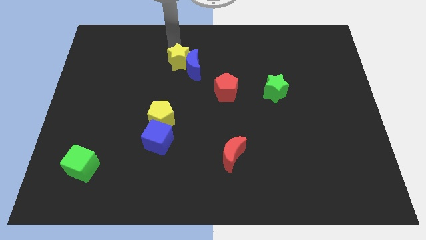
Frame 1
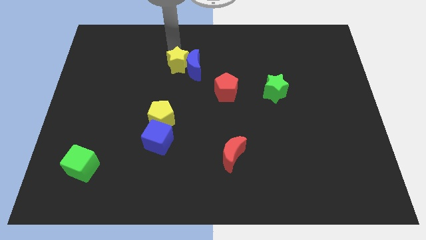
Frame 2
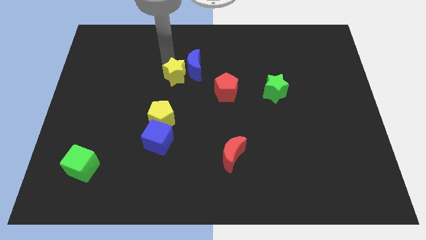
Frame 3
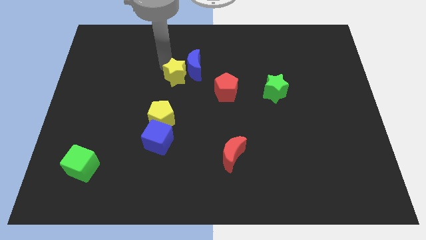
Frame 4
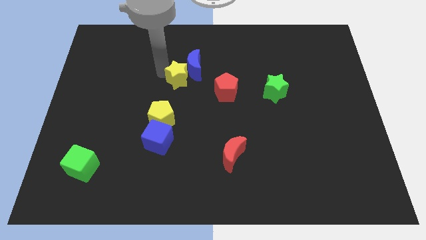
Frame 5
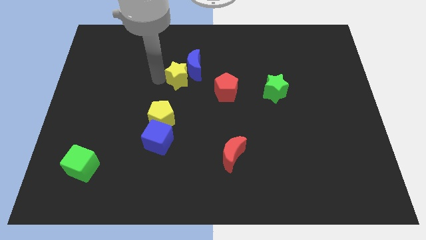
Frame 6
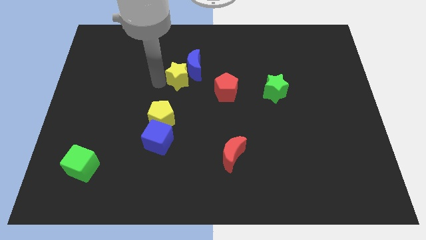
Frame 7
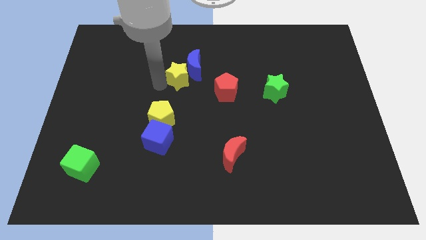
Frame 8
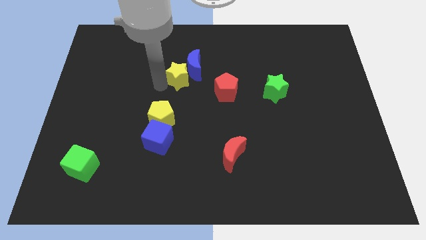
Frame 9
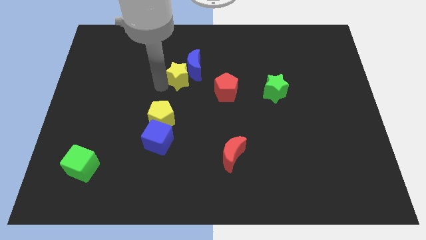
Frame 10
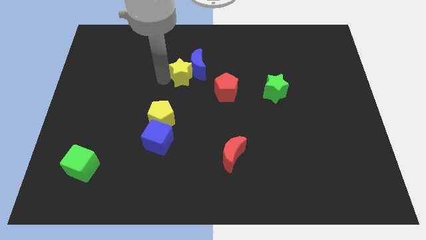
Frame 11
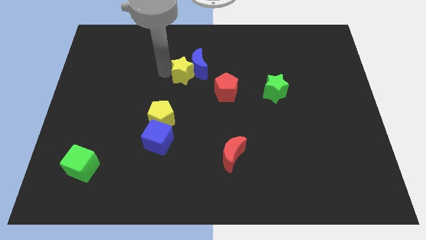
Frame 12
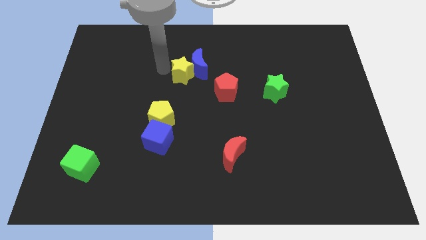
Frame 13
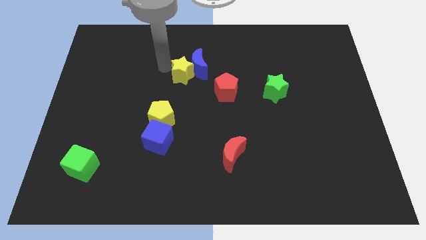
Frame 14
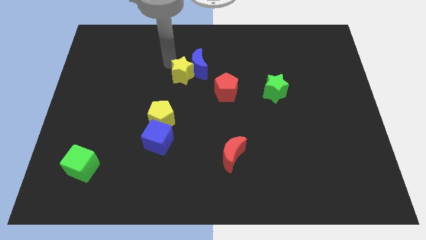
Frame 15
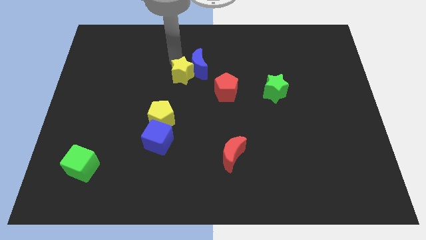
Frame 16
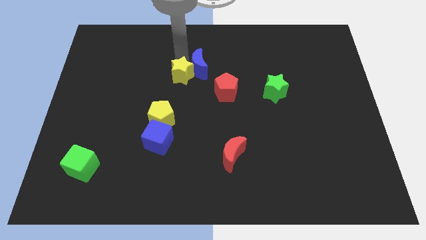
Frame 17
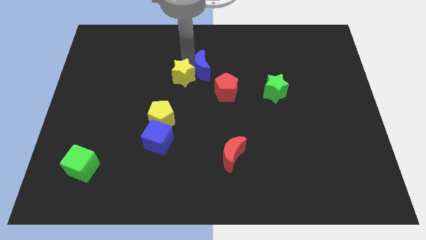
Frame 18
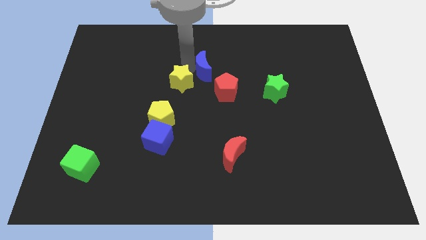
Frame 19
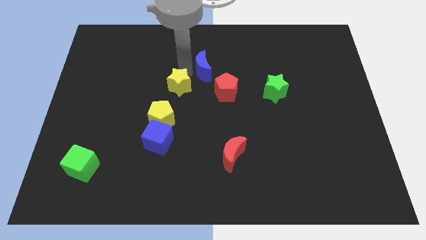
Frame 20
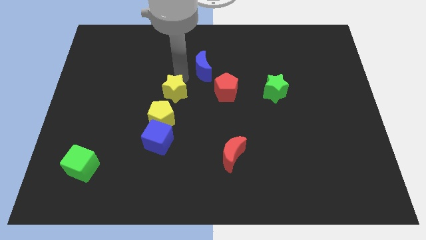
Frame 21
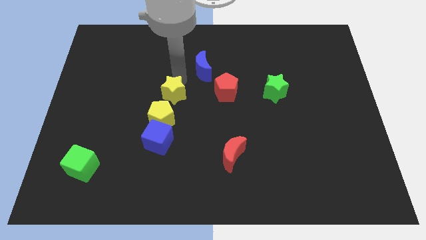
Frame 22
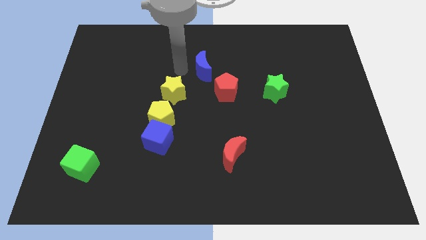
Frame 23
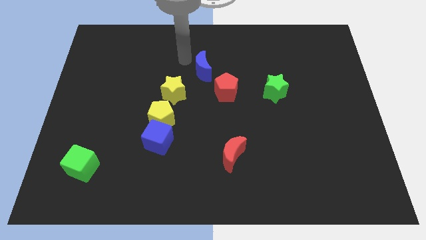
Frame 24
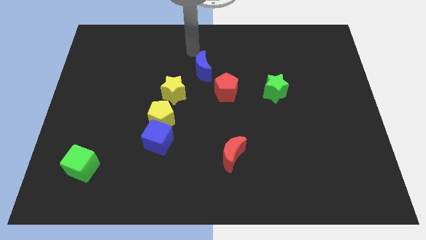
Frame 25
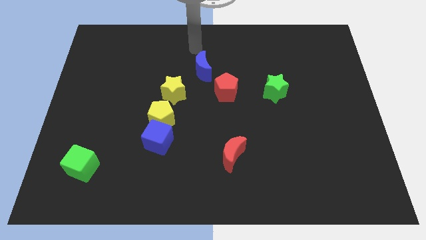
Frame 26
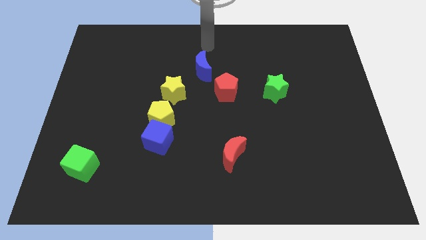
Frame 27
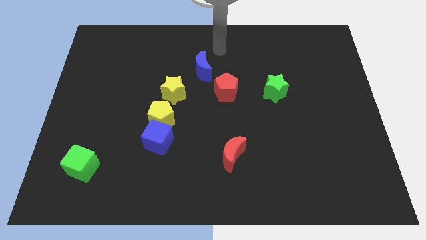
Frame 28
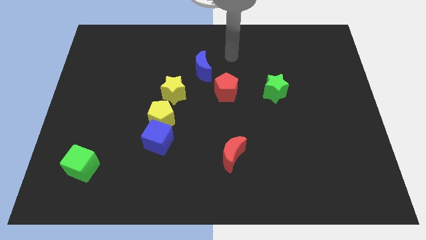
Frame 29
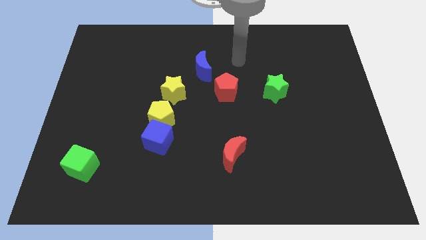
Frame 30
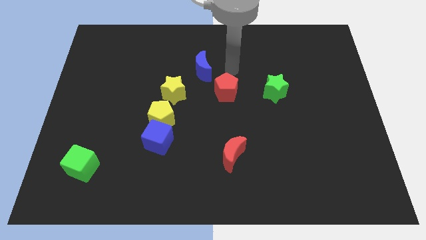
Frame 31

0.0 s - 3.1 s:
move yellow star to the top of yellow pentagon

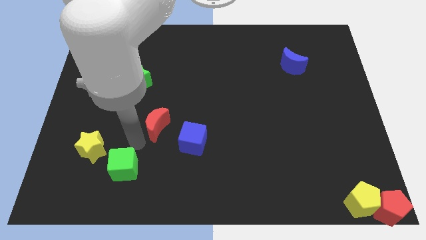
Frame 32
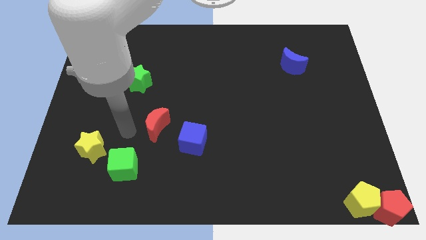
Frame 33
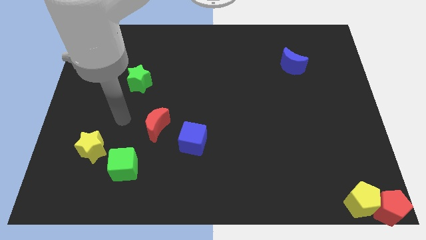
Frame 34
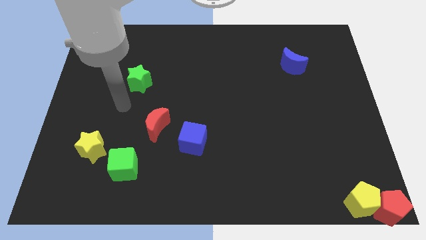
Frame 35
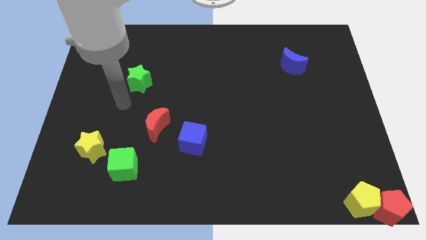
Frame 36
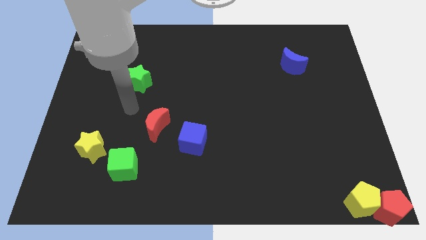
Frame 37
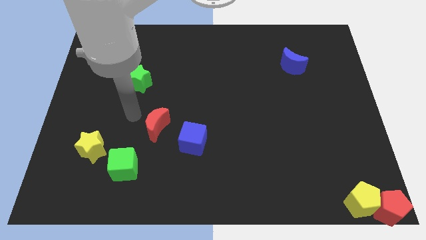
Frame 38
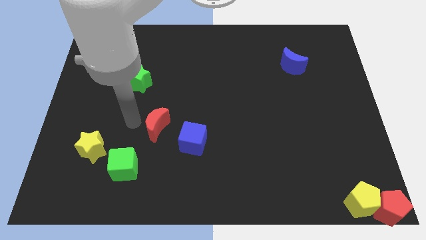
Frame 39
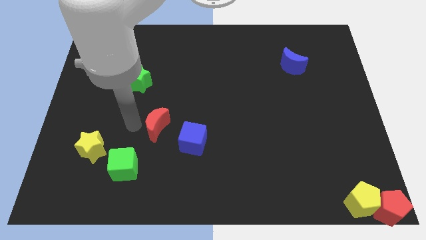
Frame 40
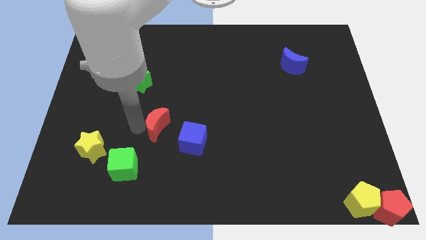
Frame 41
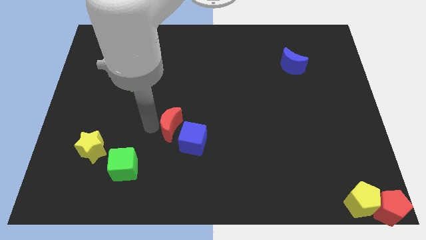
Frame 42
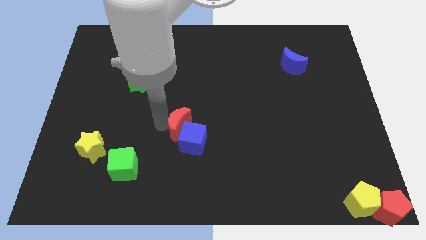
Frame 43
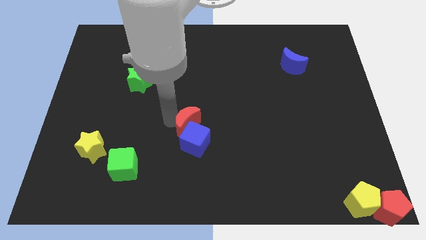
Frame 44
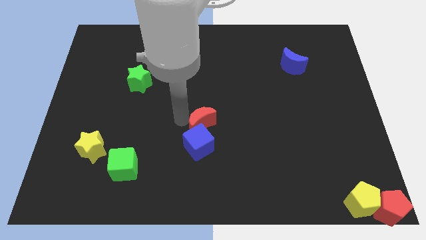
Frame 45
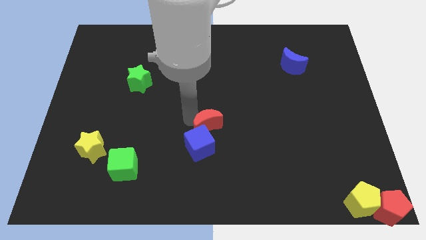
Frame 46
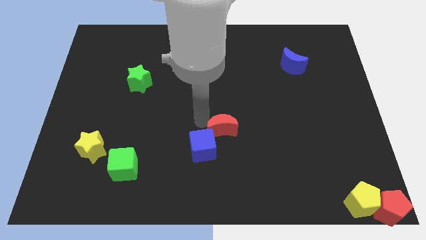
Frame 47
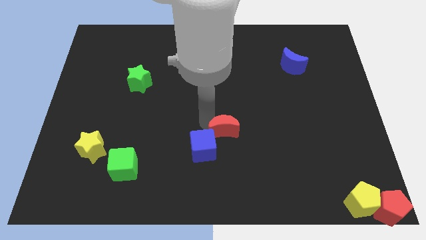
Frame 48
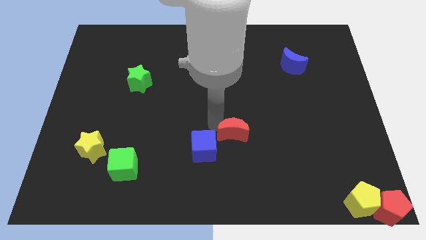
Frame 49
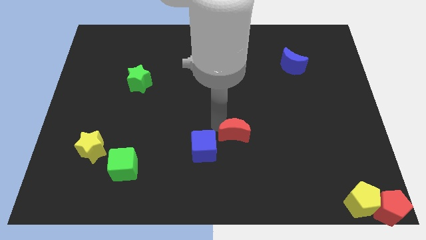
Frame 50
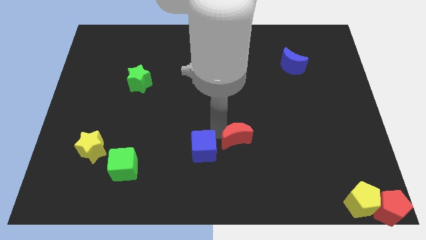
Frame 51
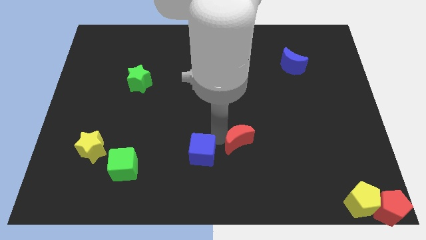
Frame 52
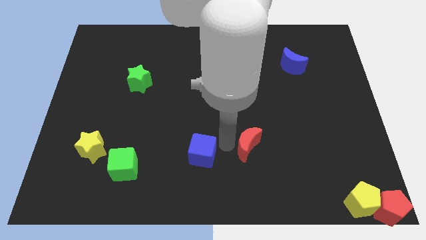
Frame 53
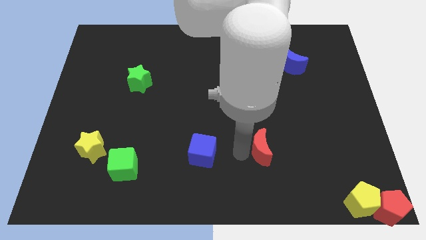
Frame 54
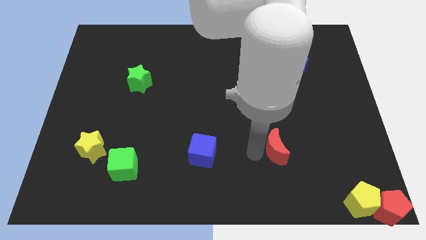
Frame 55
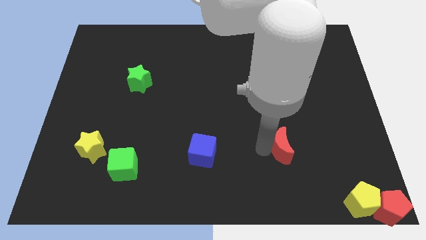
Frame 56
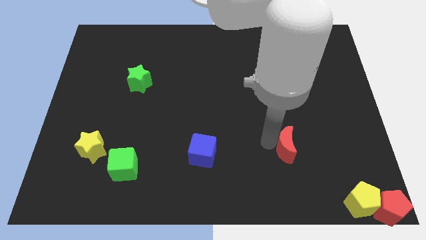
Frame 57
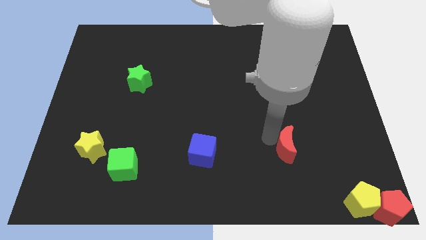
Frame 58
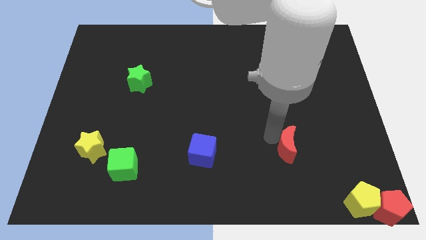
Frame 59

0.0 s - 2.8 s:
push the red crescent to the right of the blue cube

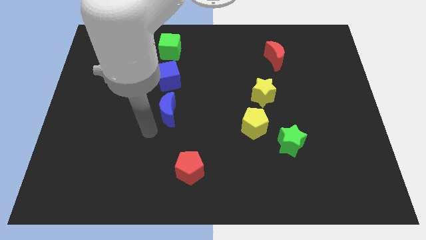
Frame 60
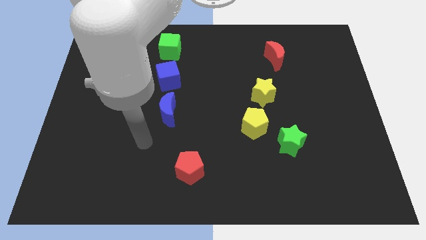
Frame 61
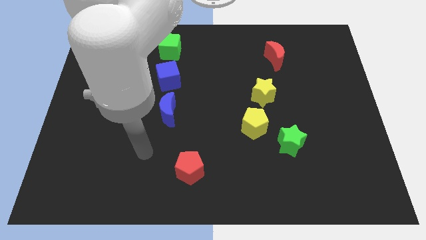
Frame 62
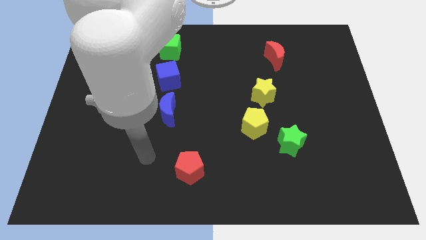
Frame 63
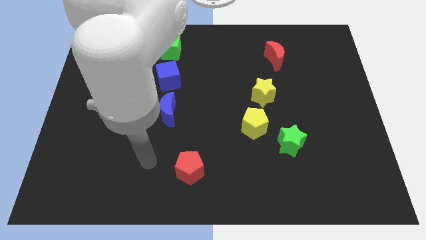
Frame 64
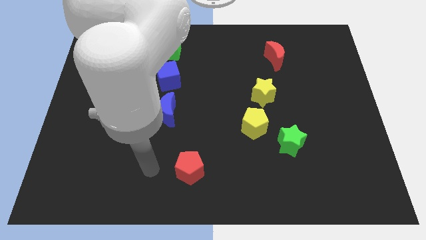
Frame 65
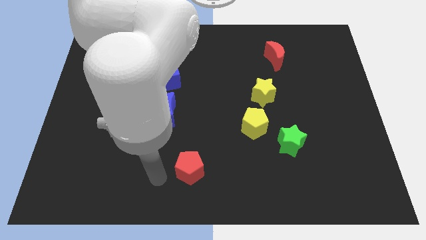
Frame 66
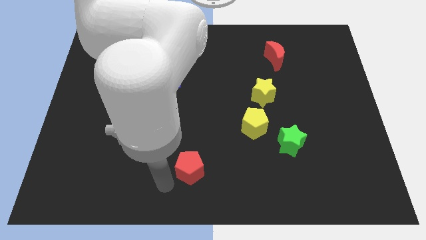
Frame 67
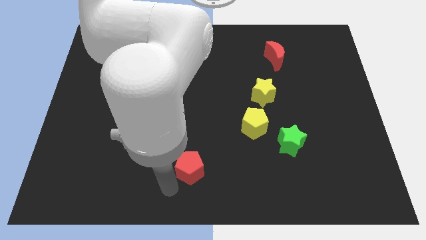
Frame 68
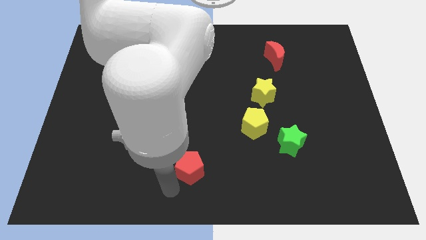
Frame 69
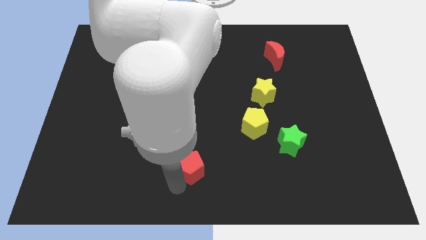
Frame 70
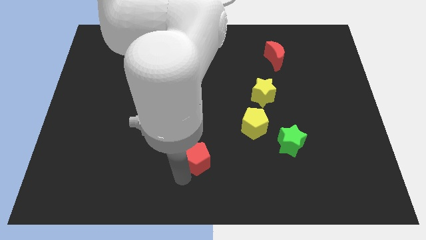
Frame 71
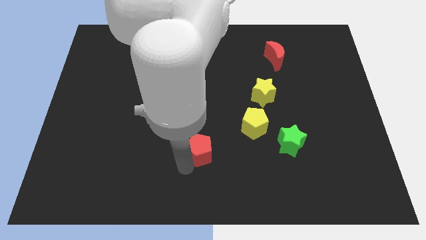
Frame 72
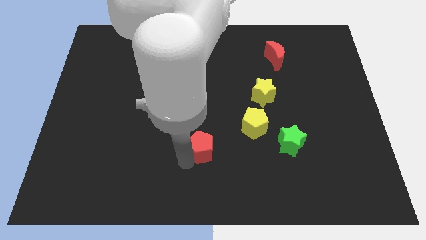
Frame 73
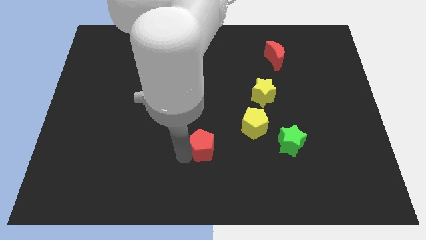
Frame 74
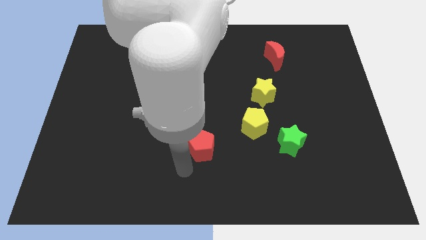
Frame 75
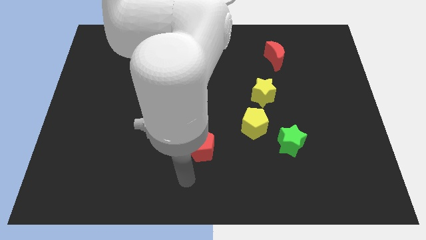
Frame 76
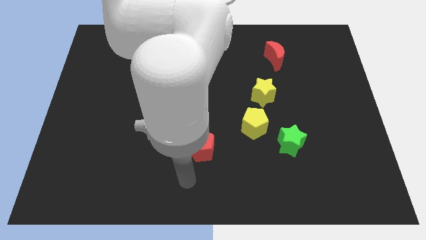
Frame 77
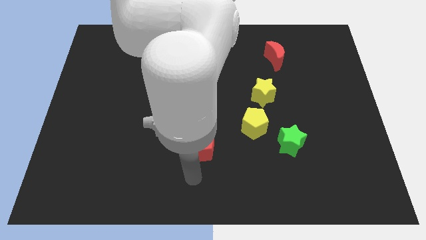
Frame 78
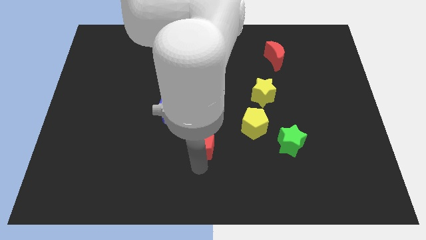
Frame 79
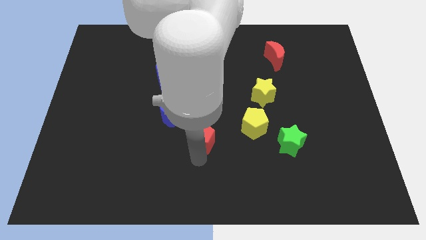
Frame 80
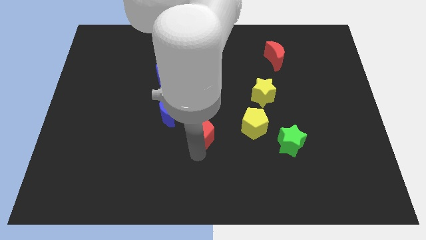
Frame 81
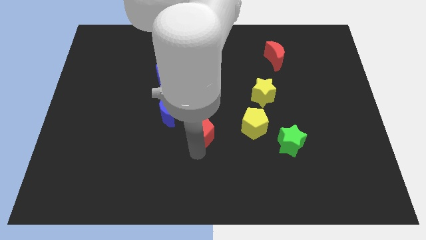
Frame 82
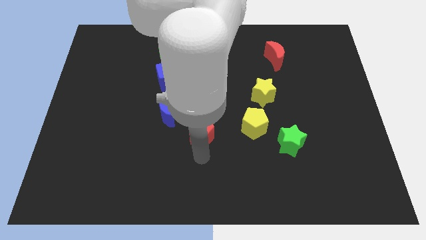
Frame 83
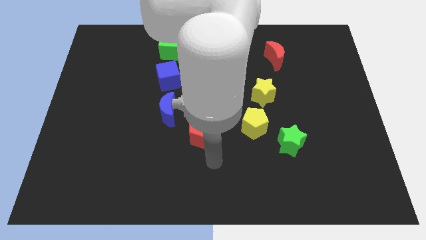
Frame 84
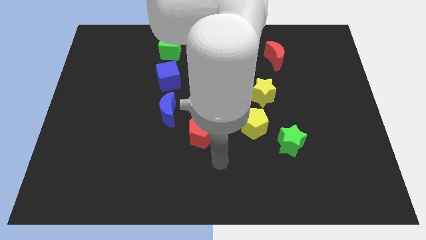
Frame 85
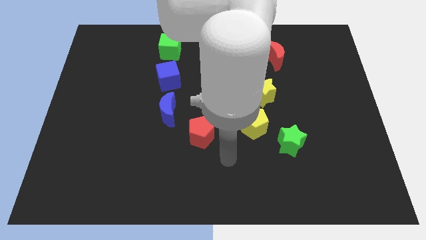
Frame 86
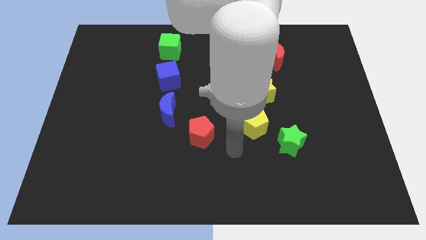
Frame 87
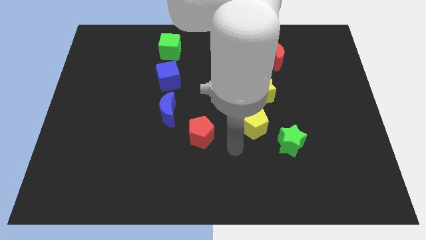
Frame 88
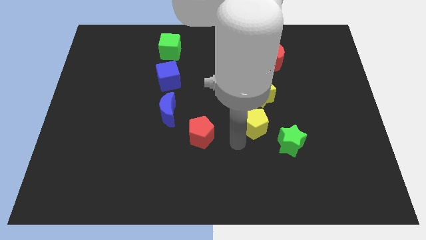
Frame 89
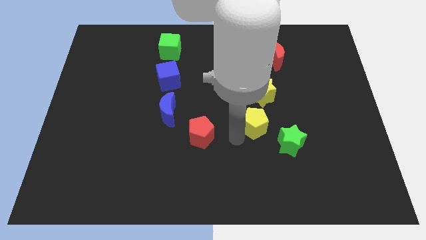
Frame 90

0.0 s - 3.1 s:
move the red pentagon towards bottom right corner of the blue crescent

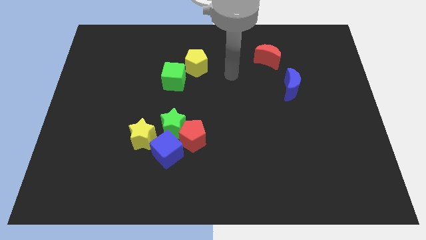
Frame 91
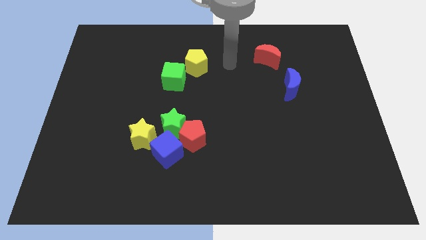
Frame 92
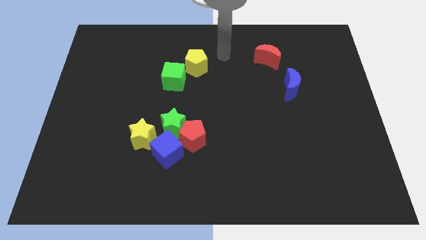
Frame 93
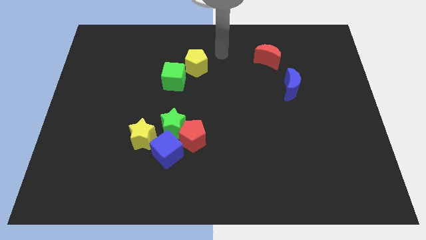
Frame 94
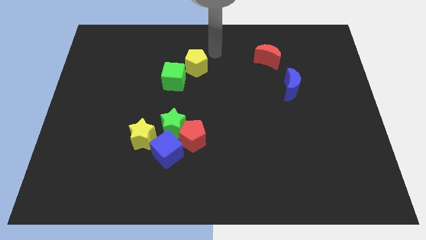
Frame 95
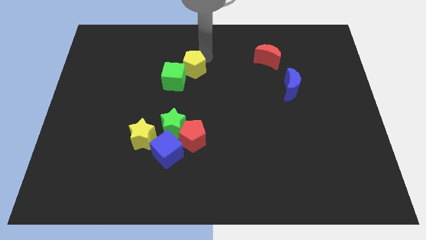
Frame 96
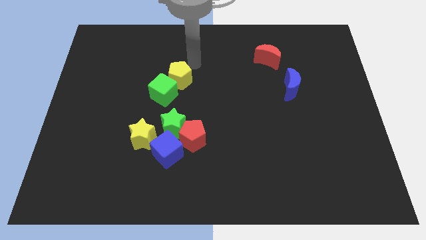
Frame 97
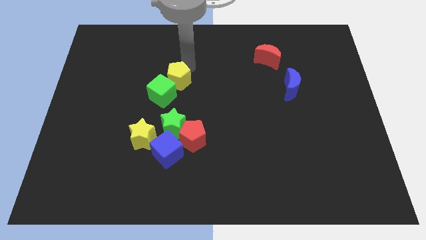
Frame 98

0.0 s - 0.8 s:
push the yellow pentagon into green cube
